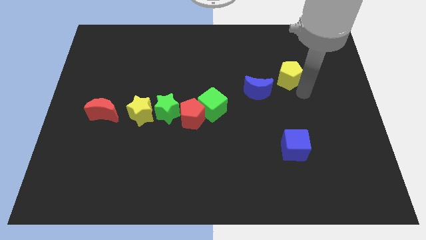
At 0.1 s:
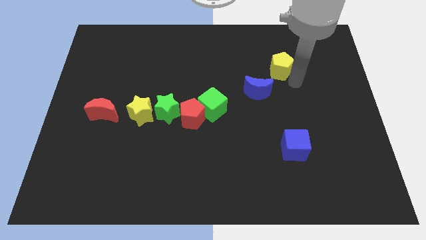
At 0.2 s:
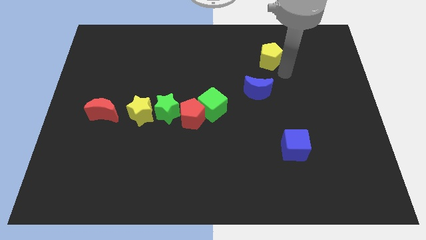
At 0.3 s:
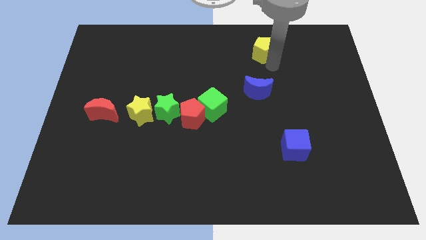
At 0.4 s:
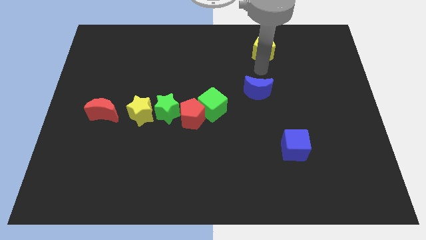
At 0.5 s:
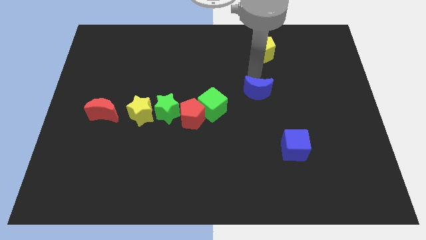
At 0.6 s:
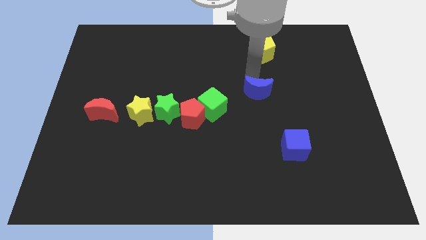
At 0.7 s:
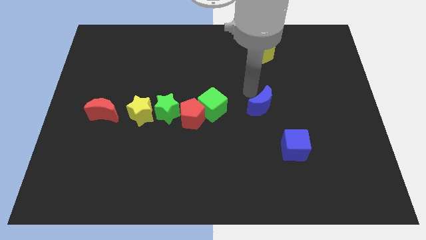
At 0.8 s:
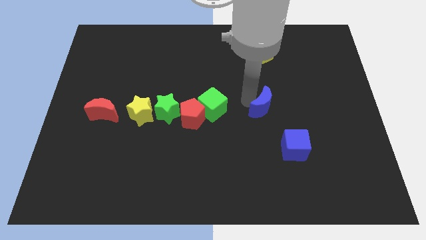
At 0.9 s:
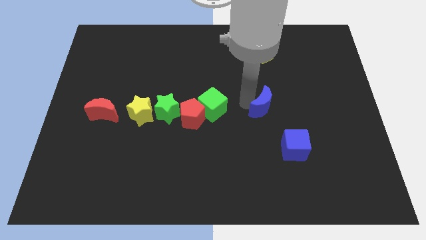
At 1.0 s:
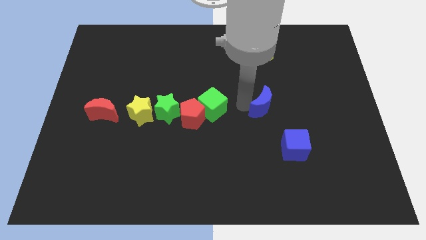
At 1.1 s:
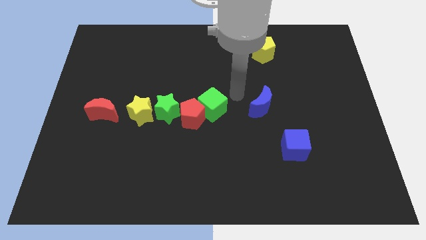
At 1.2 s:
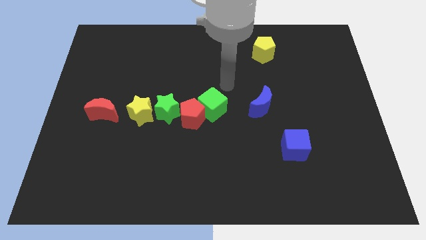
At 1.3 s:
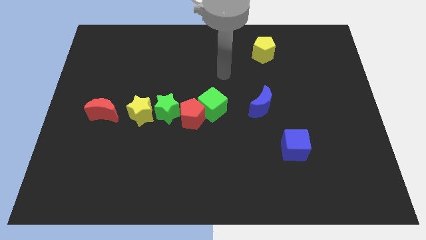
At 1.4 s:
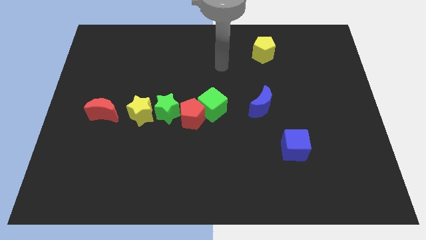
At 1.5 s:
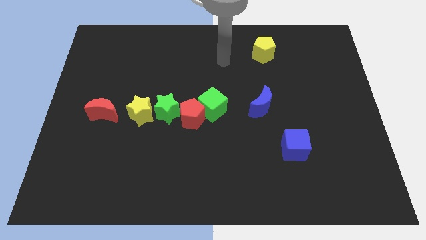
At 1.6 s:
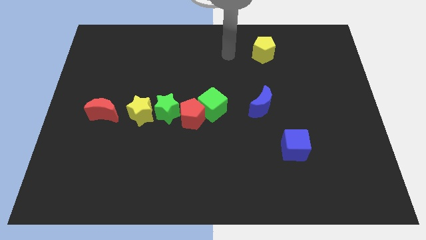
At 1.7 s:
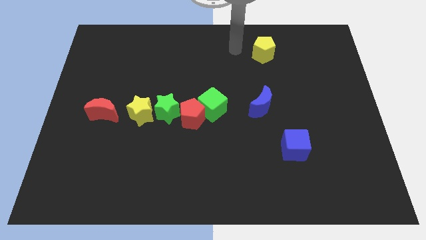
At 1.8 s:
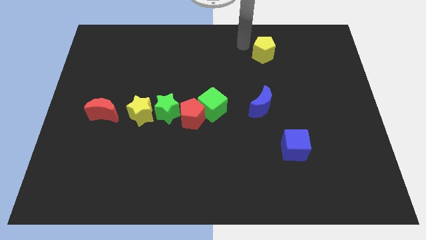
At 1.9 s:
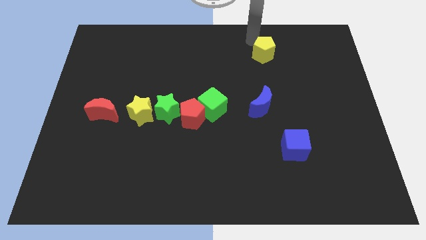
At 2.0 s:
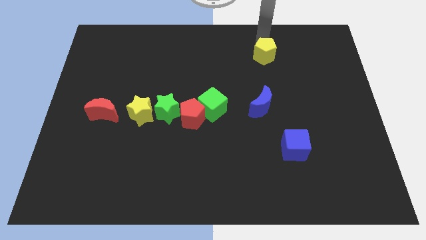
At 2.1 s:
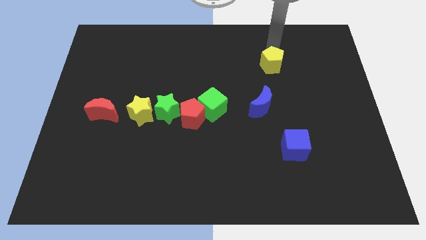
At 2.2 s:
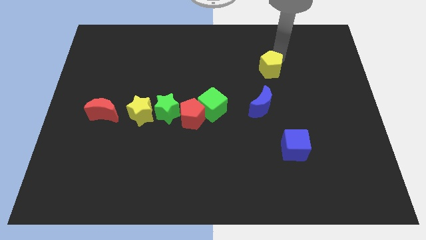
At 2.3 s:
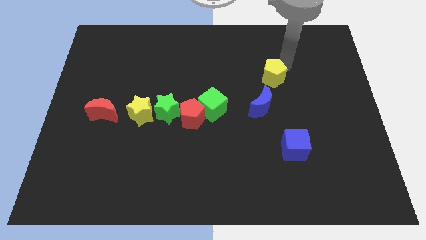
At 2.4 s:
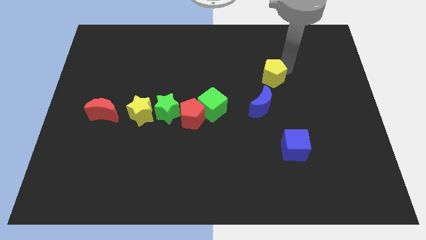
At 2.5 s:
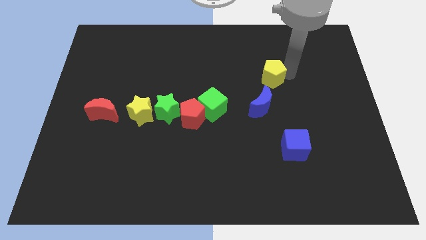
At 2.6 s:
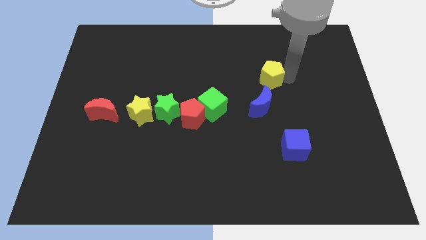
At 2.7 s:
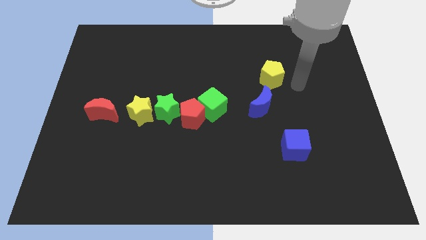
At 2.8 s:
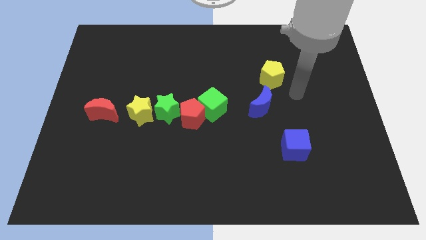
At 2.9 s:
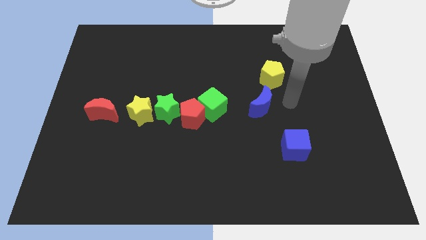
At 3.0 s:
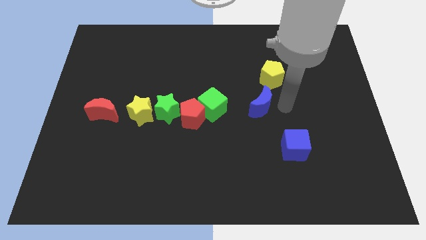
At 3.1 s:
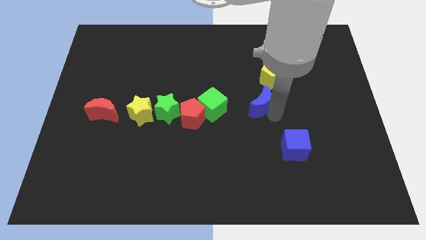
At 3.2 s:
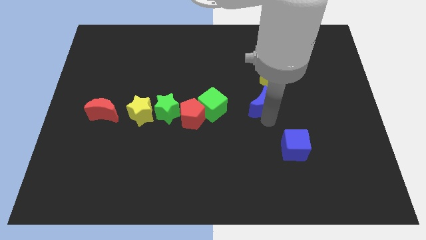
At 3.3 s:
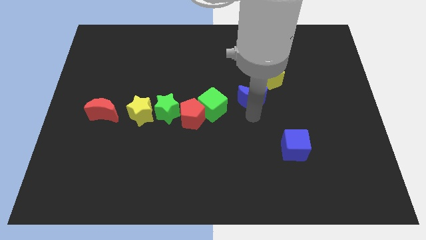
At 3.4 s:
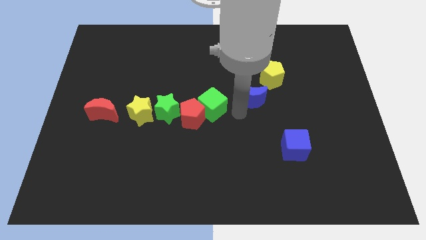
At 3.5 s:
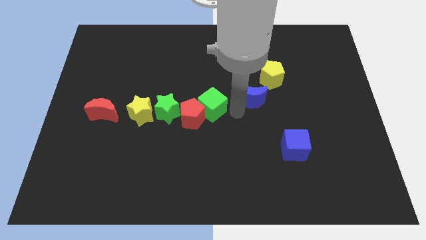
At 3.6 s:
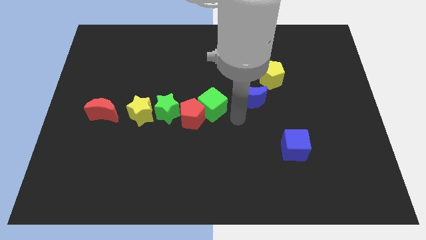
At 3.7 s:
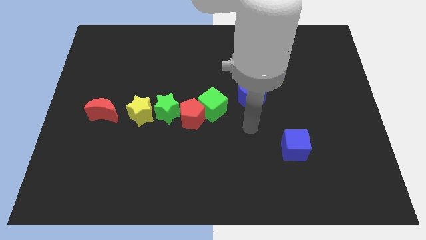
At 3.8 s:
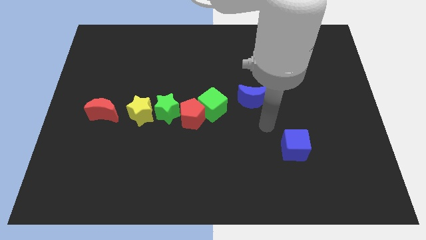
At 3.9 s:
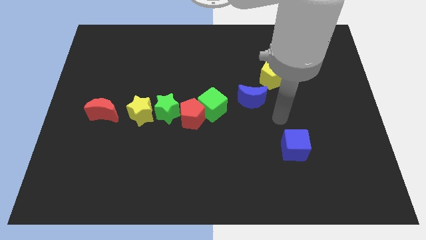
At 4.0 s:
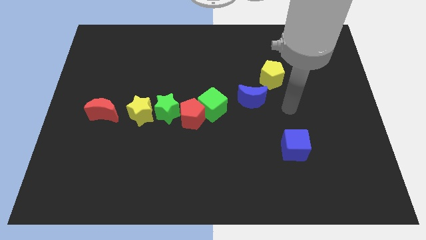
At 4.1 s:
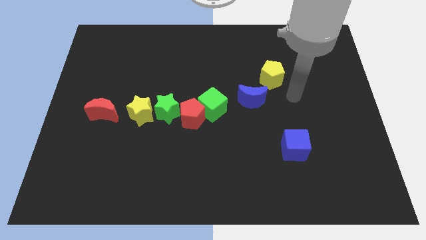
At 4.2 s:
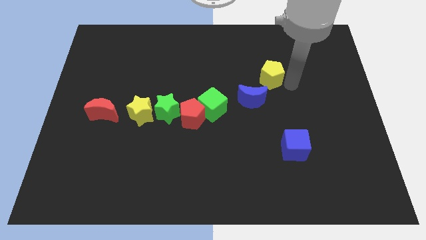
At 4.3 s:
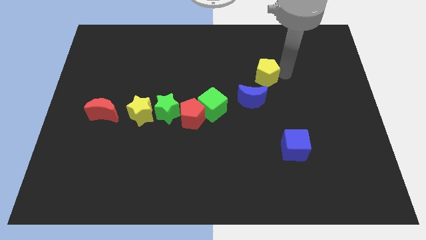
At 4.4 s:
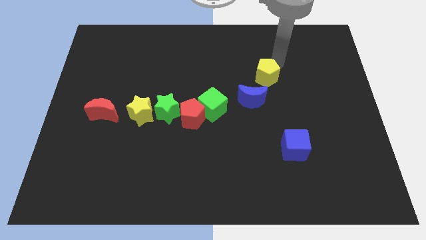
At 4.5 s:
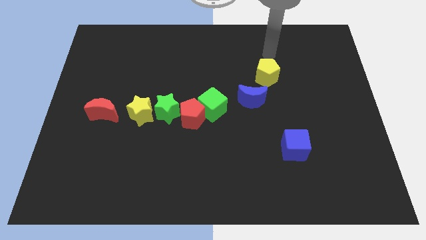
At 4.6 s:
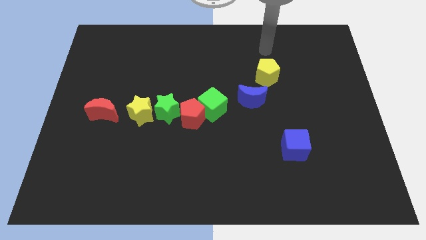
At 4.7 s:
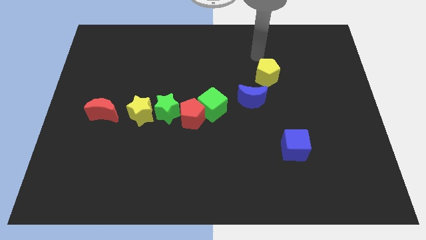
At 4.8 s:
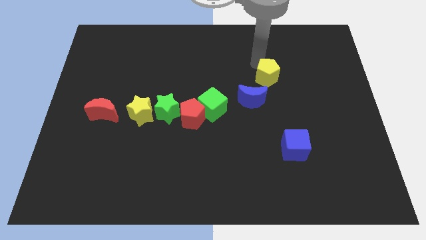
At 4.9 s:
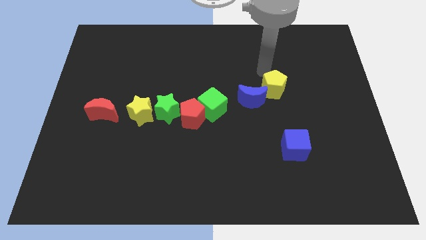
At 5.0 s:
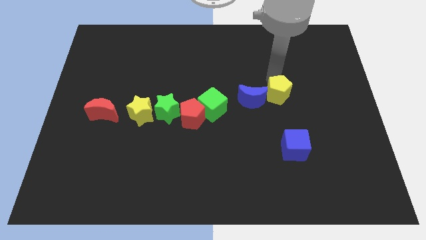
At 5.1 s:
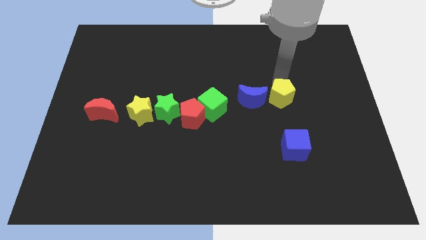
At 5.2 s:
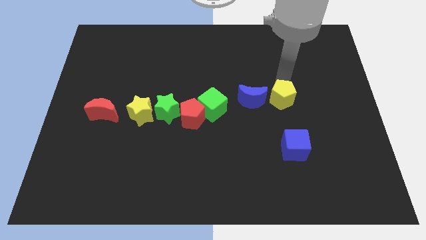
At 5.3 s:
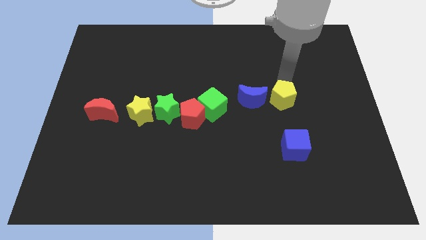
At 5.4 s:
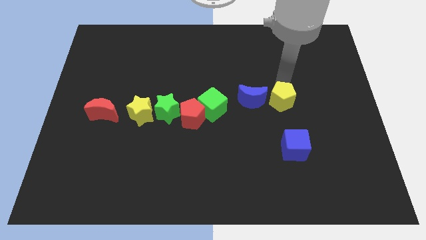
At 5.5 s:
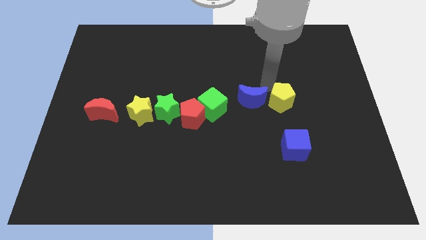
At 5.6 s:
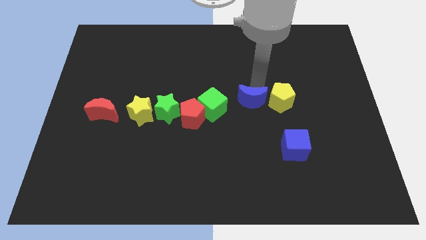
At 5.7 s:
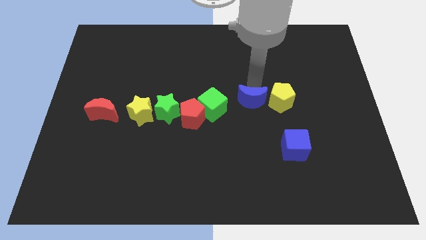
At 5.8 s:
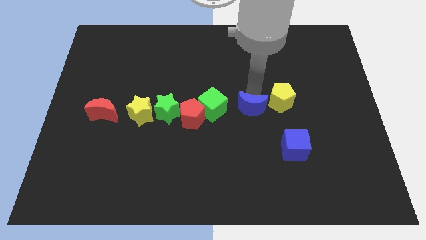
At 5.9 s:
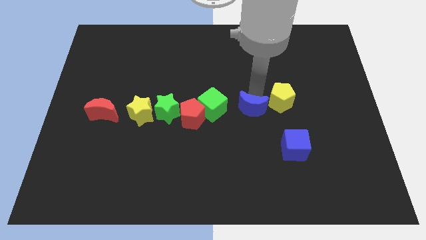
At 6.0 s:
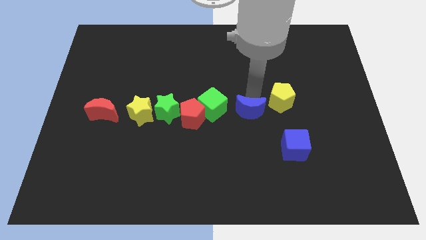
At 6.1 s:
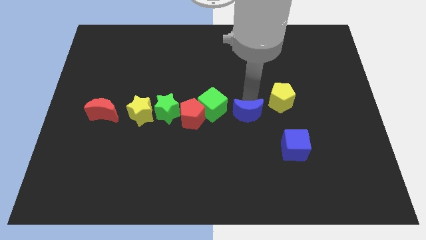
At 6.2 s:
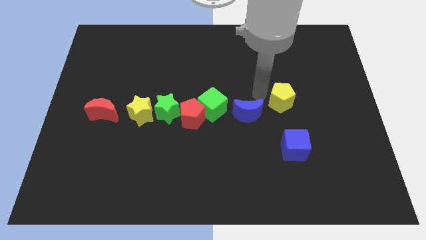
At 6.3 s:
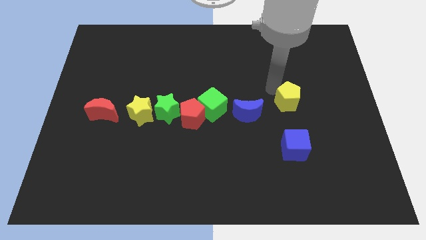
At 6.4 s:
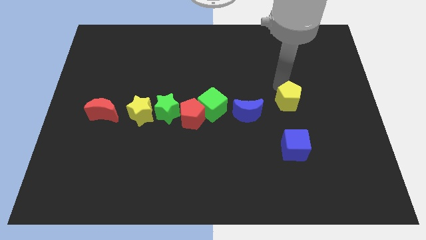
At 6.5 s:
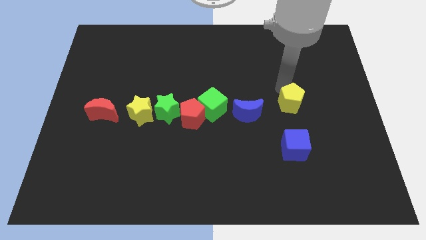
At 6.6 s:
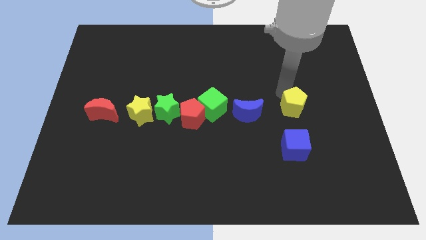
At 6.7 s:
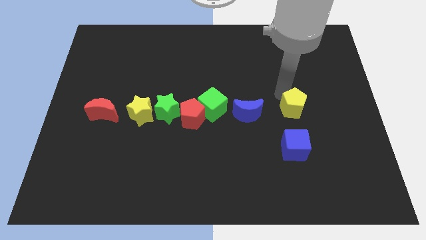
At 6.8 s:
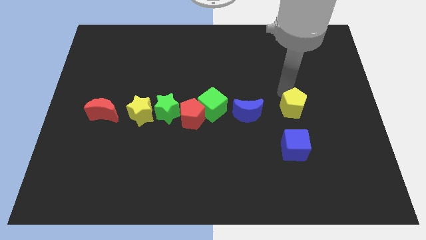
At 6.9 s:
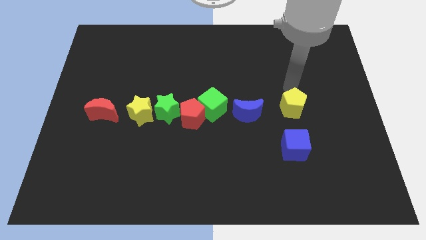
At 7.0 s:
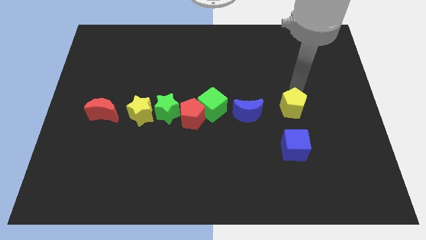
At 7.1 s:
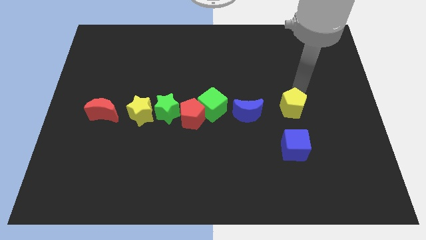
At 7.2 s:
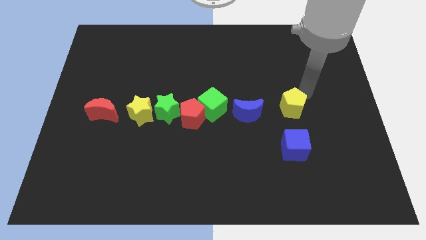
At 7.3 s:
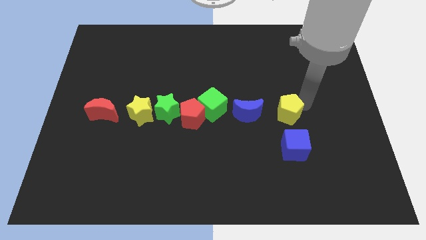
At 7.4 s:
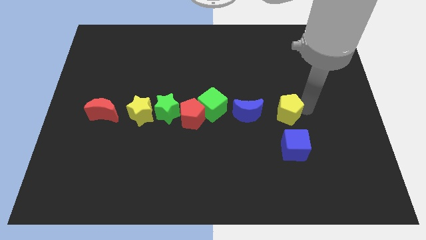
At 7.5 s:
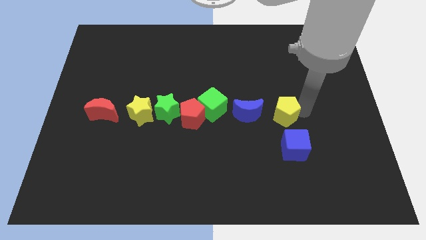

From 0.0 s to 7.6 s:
push the blue crescent along with the yellow pentagon to the right side of the blue crescent

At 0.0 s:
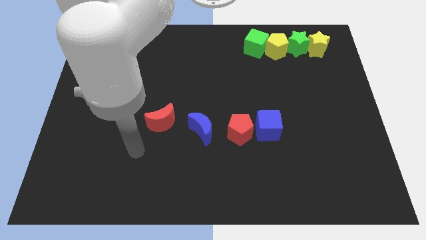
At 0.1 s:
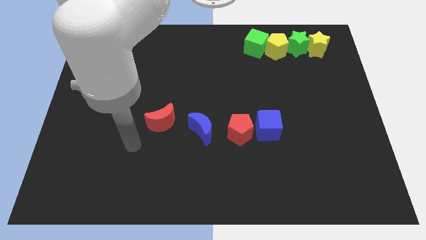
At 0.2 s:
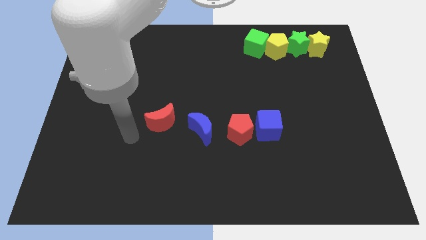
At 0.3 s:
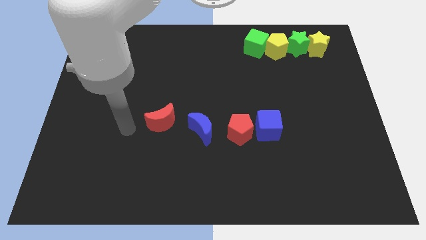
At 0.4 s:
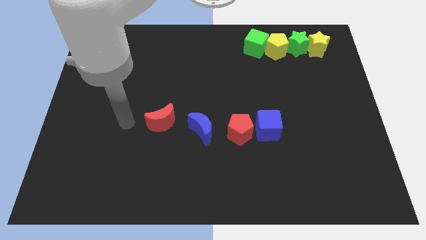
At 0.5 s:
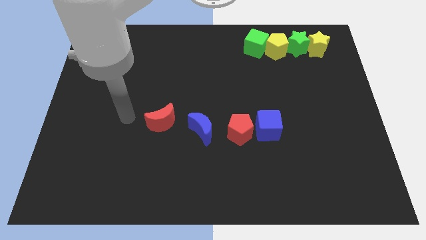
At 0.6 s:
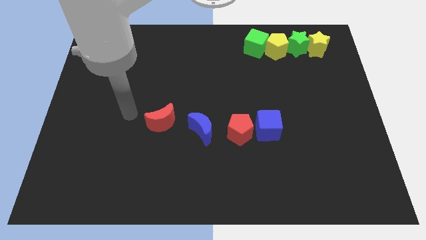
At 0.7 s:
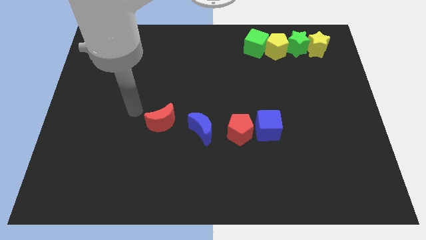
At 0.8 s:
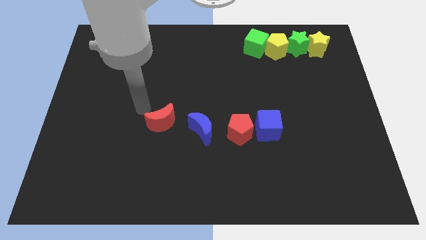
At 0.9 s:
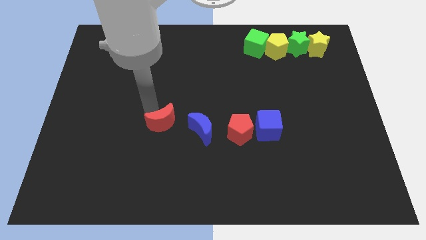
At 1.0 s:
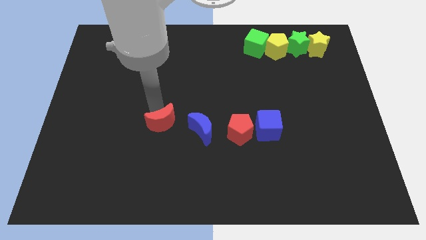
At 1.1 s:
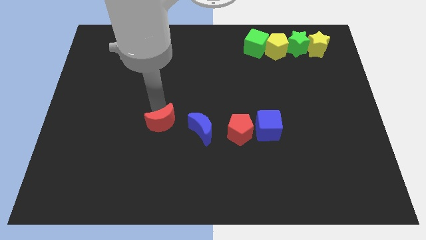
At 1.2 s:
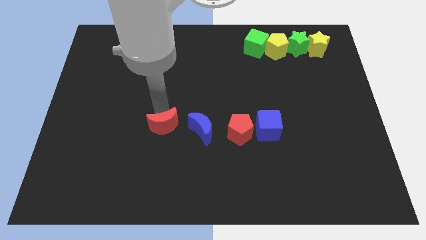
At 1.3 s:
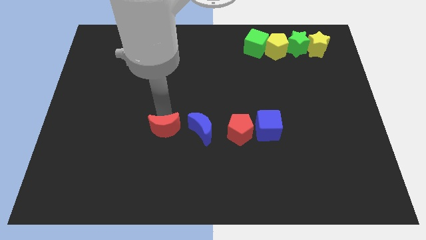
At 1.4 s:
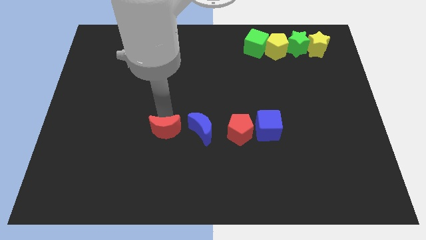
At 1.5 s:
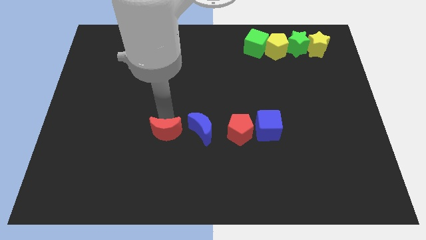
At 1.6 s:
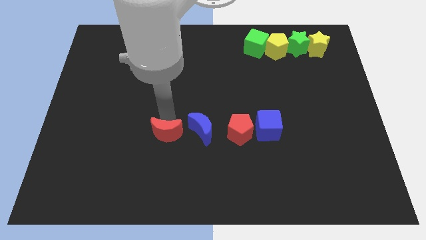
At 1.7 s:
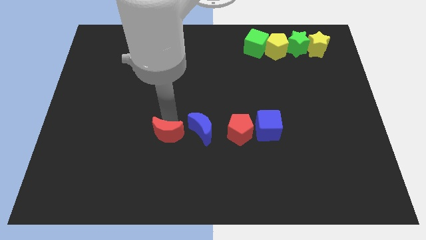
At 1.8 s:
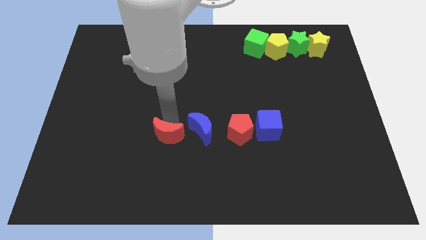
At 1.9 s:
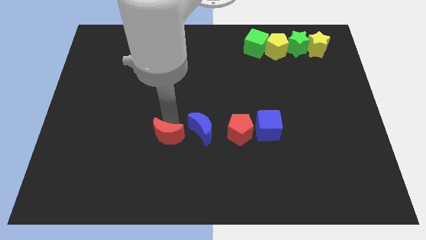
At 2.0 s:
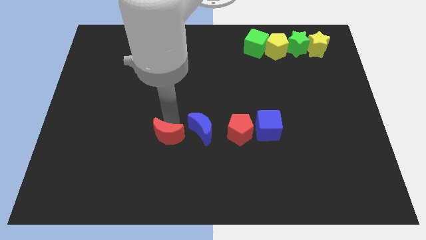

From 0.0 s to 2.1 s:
move red crescent slightly to the bottom
